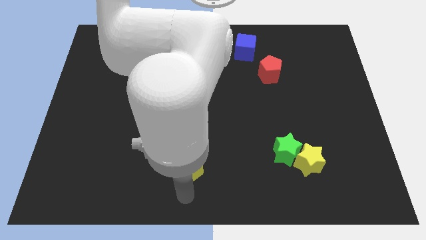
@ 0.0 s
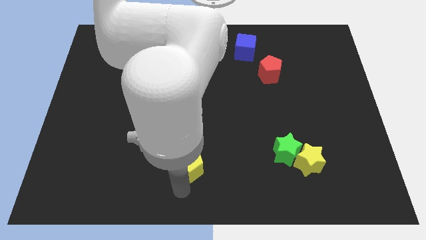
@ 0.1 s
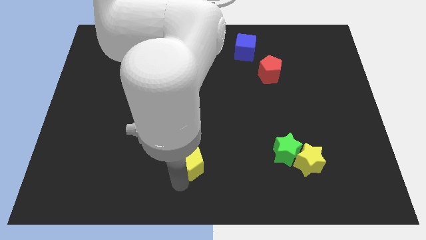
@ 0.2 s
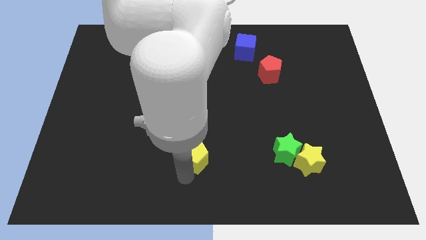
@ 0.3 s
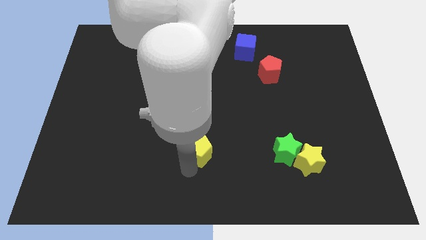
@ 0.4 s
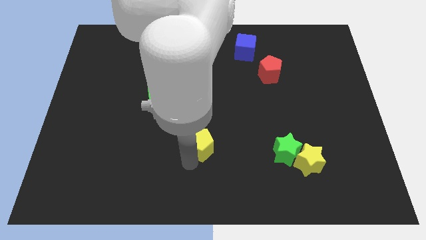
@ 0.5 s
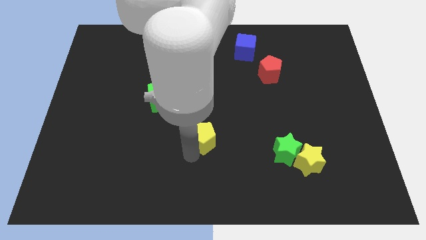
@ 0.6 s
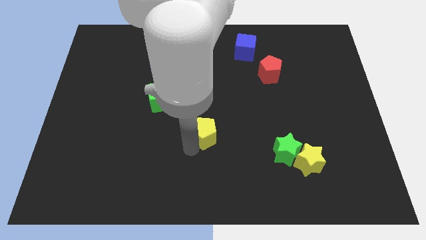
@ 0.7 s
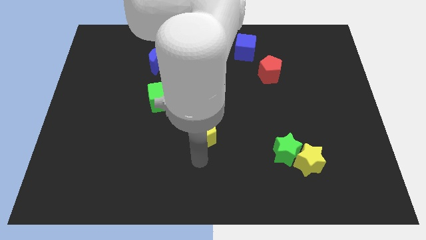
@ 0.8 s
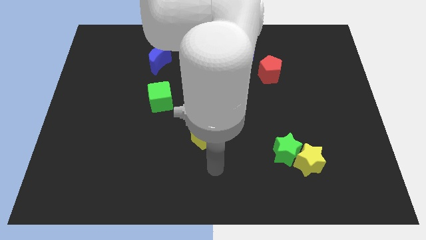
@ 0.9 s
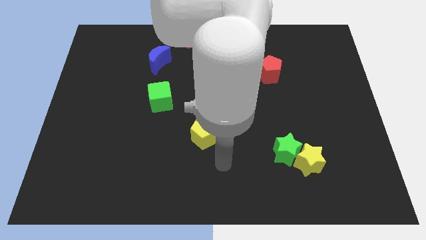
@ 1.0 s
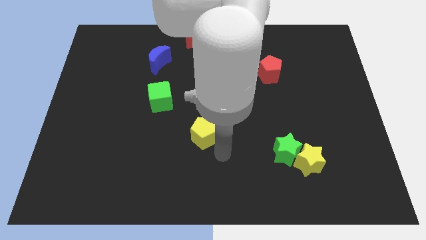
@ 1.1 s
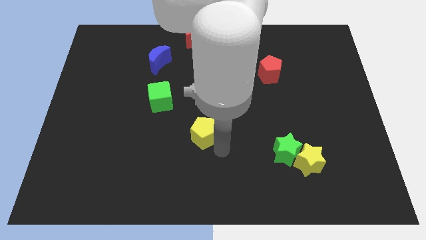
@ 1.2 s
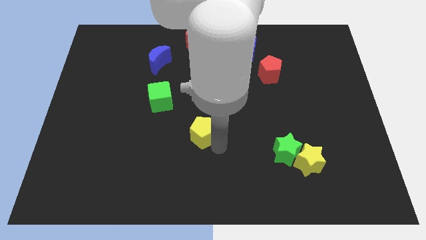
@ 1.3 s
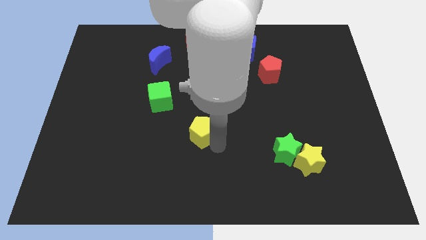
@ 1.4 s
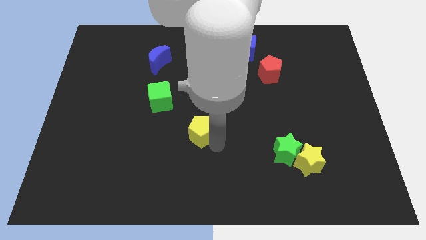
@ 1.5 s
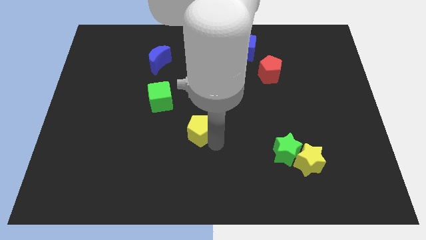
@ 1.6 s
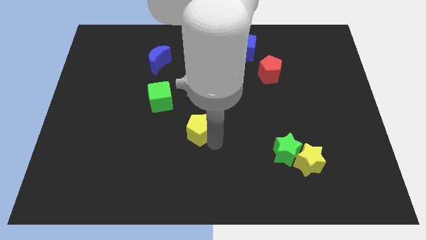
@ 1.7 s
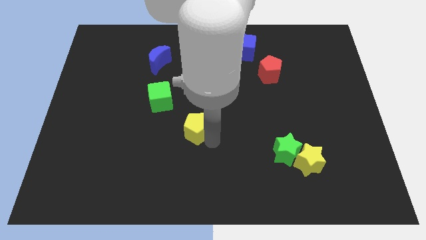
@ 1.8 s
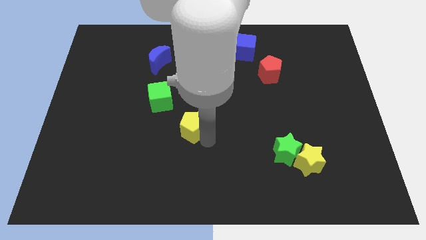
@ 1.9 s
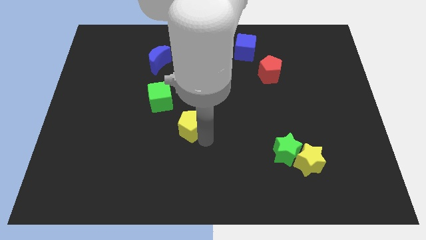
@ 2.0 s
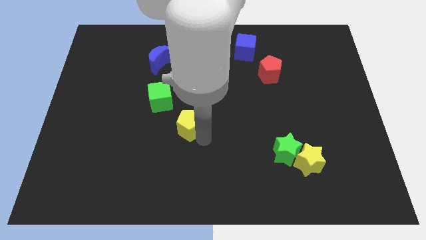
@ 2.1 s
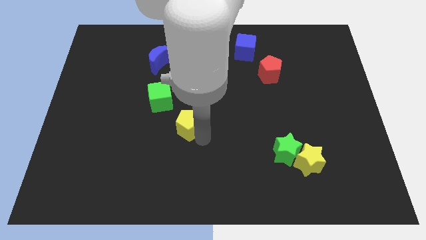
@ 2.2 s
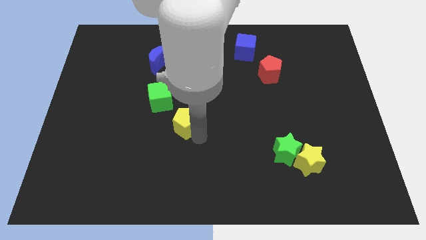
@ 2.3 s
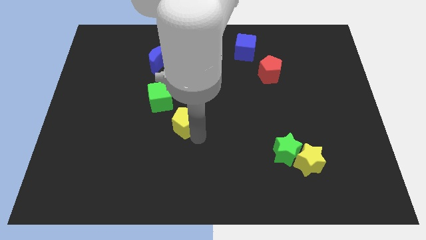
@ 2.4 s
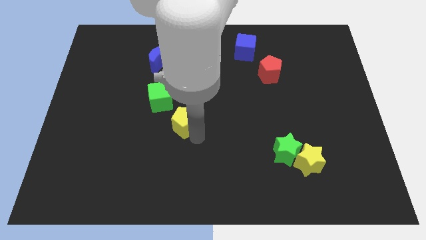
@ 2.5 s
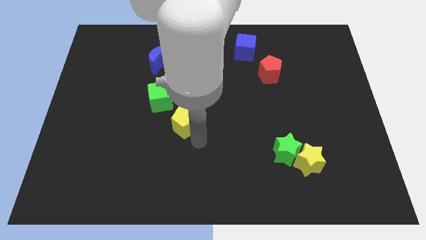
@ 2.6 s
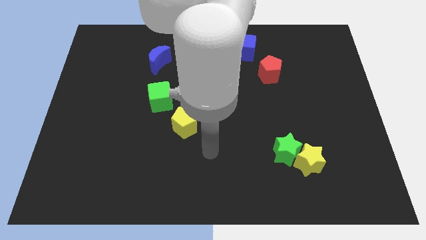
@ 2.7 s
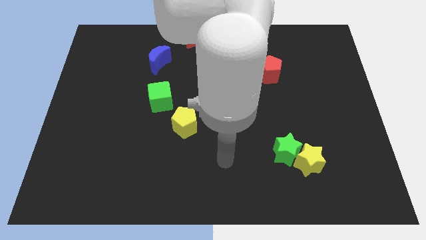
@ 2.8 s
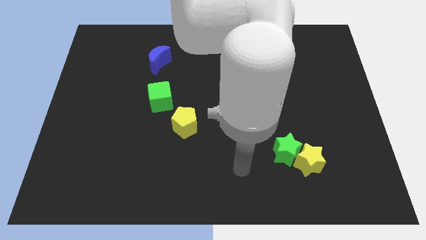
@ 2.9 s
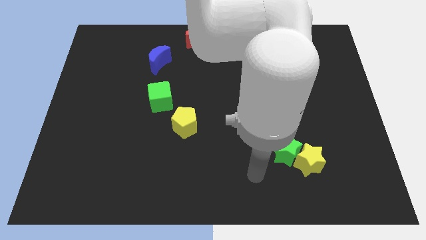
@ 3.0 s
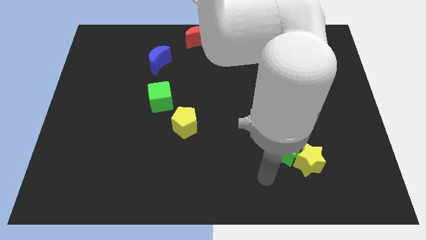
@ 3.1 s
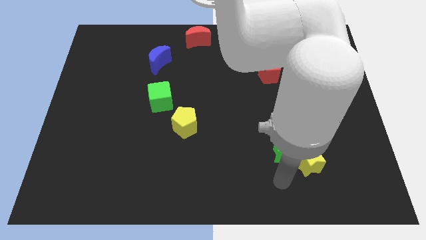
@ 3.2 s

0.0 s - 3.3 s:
put yellow pentagon vertically below red moon

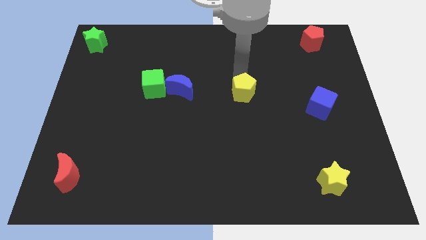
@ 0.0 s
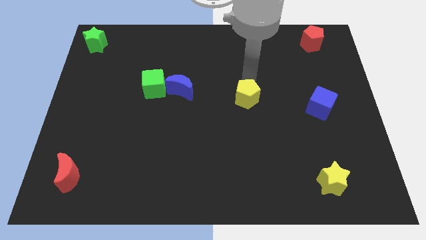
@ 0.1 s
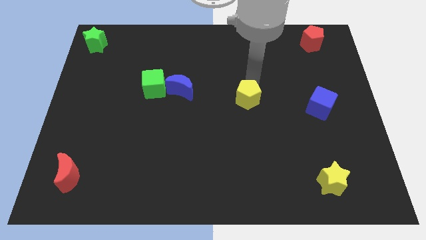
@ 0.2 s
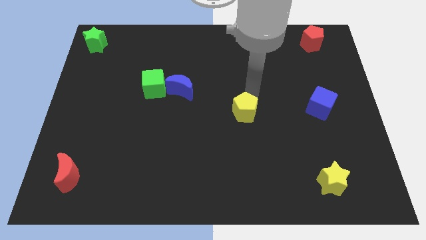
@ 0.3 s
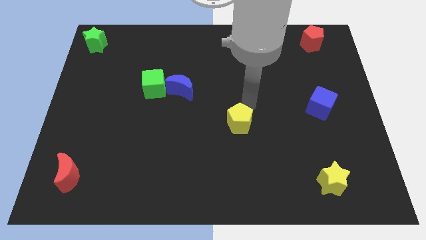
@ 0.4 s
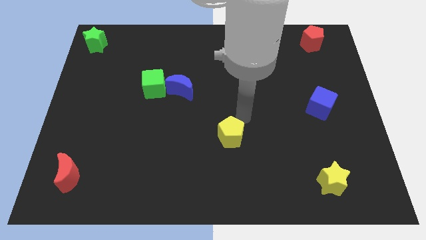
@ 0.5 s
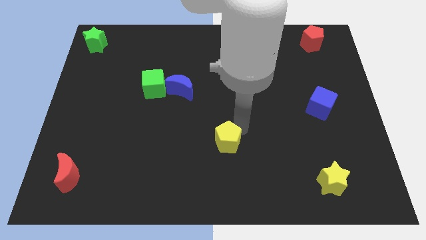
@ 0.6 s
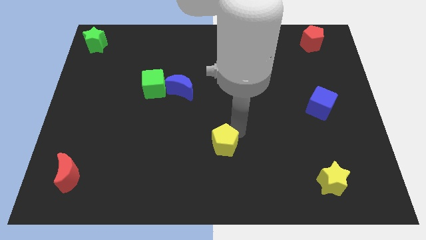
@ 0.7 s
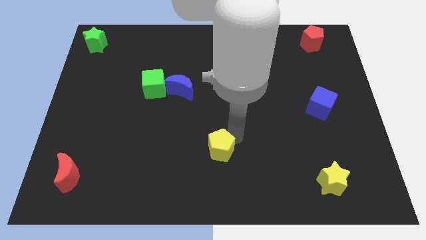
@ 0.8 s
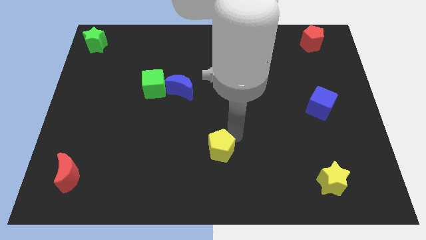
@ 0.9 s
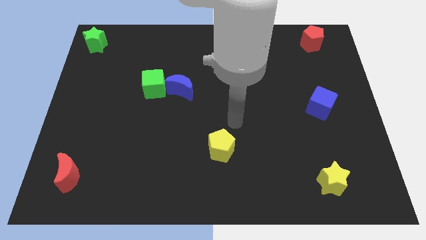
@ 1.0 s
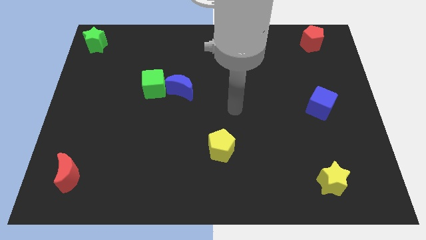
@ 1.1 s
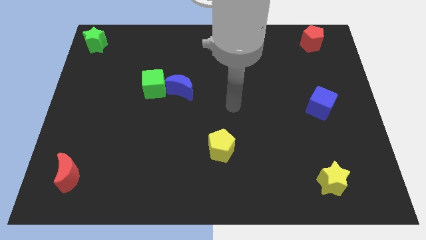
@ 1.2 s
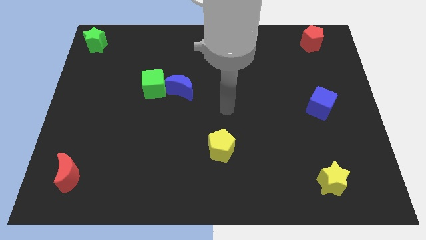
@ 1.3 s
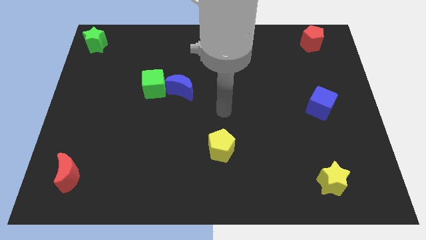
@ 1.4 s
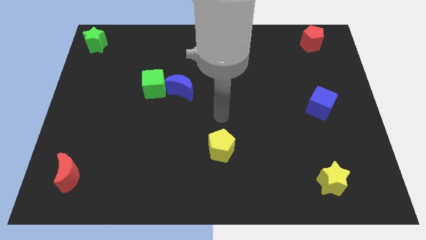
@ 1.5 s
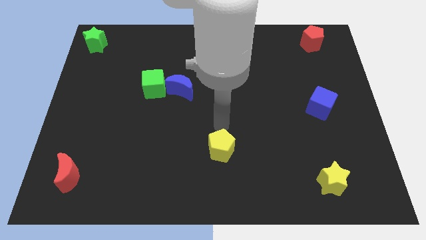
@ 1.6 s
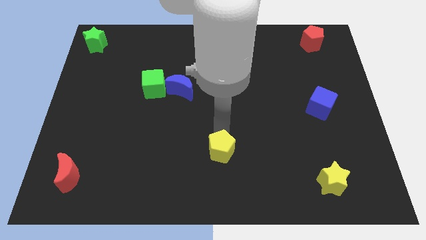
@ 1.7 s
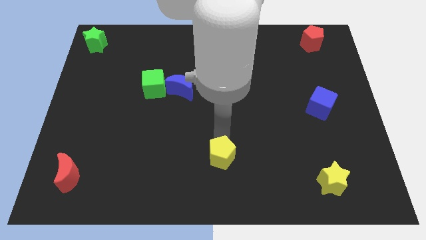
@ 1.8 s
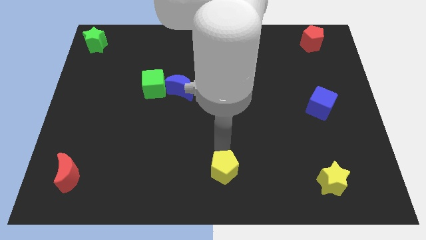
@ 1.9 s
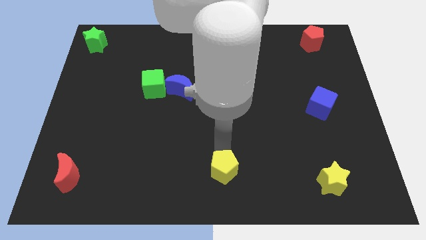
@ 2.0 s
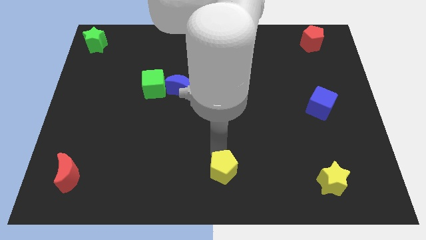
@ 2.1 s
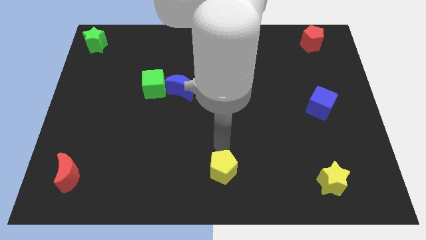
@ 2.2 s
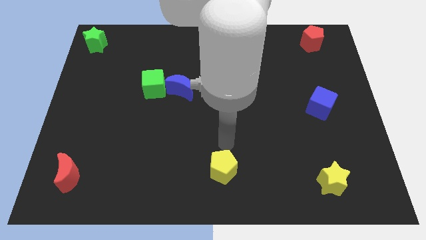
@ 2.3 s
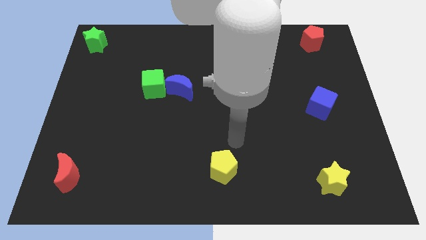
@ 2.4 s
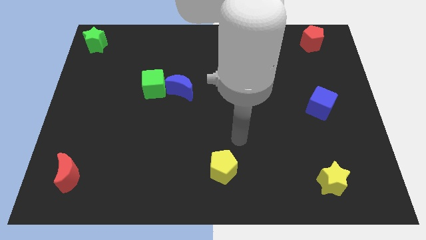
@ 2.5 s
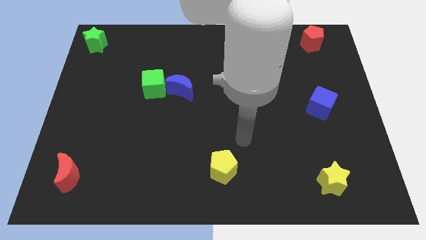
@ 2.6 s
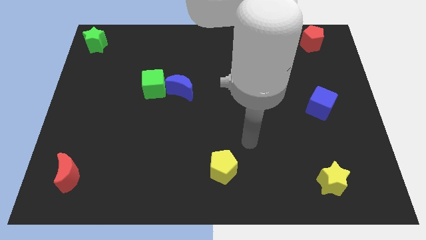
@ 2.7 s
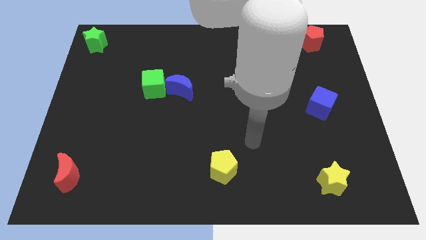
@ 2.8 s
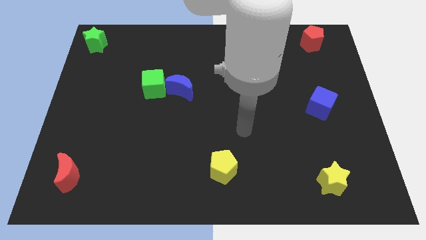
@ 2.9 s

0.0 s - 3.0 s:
push the yellow pentagon towards the bottom center of the board

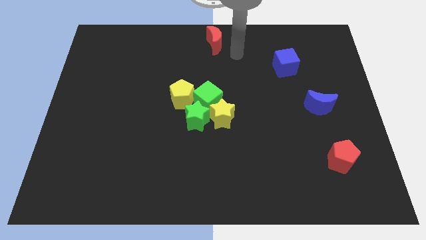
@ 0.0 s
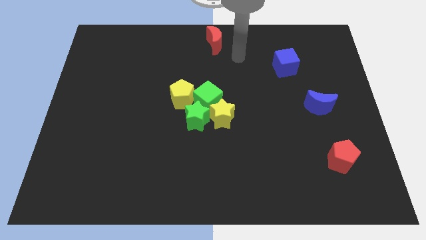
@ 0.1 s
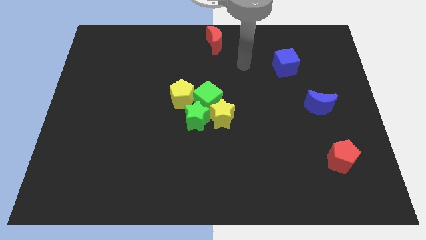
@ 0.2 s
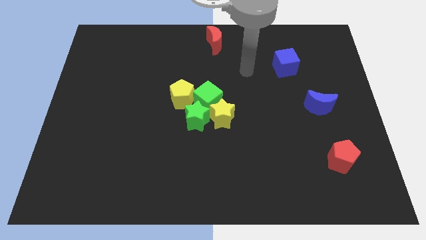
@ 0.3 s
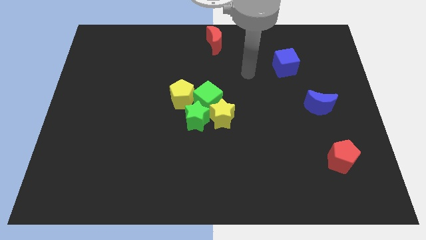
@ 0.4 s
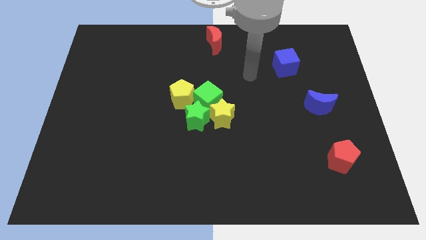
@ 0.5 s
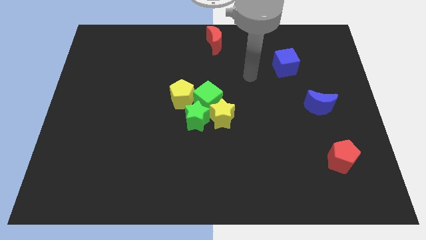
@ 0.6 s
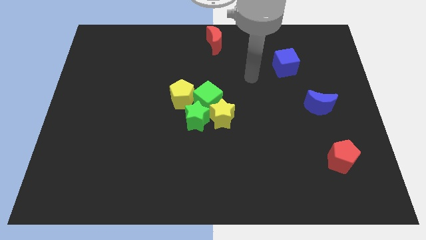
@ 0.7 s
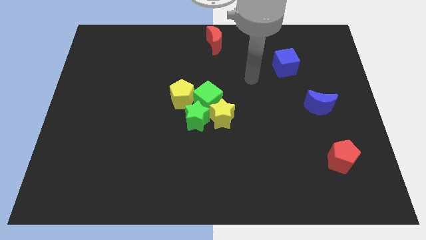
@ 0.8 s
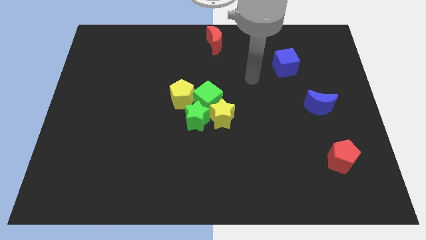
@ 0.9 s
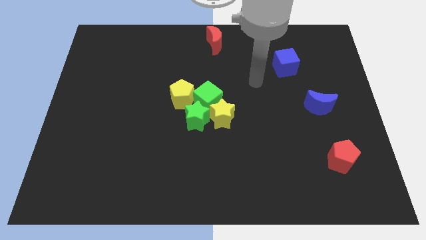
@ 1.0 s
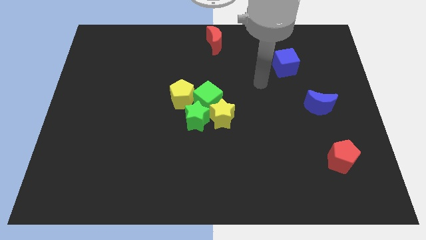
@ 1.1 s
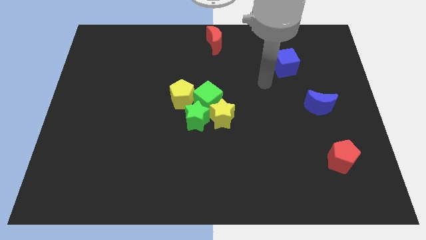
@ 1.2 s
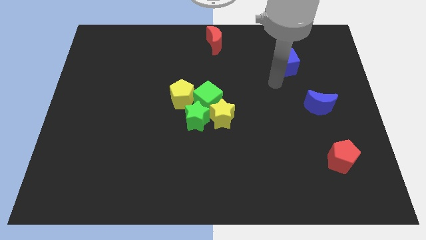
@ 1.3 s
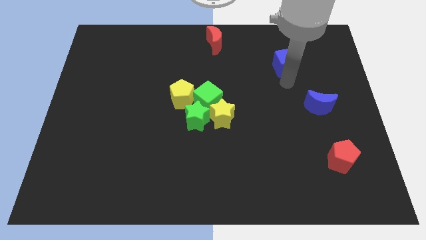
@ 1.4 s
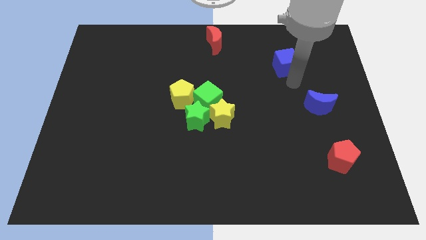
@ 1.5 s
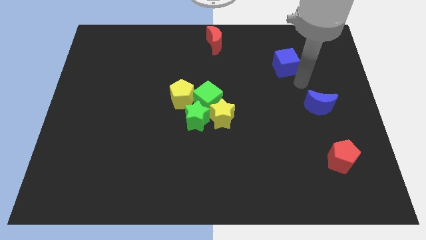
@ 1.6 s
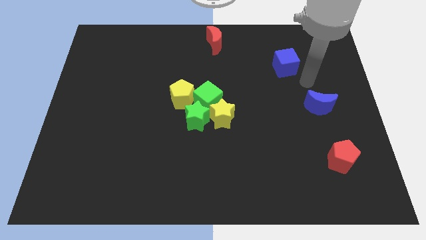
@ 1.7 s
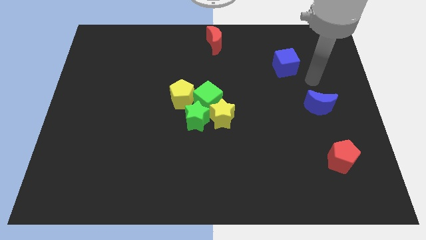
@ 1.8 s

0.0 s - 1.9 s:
move your arm to the top side of the blue moon

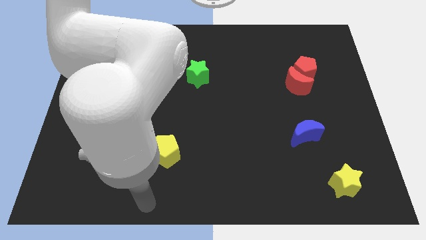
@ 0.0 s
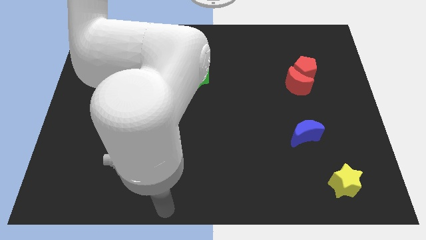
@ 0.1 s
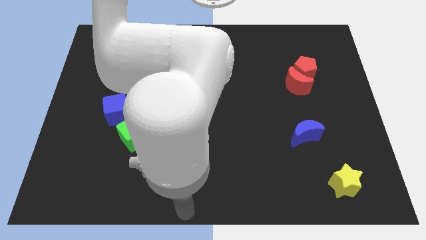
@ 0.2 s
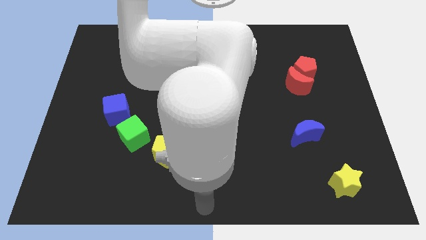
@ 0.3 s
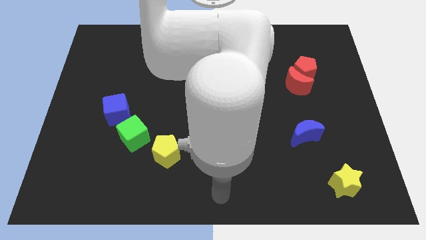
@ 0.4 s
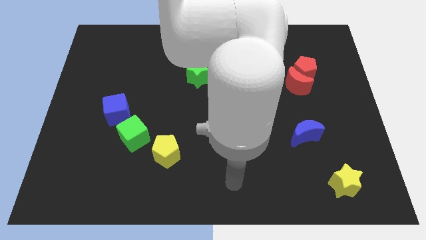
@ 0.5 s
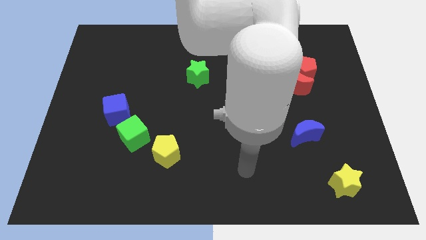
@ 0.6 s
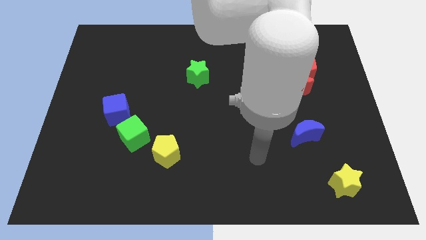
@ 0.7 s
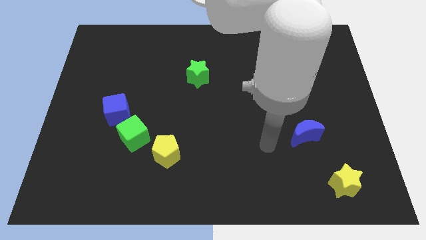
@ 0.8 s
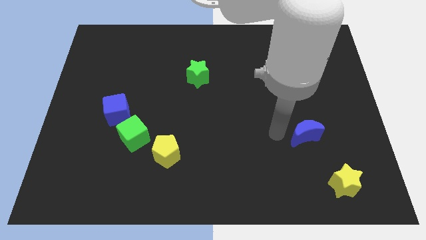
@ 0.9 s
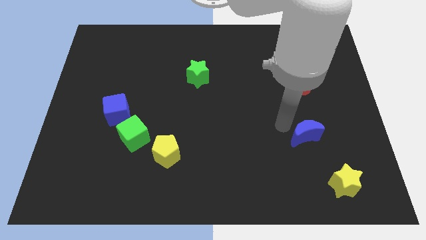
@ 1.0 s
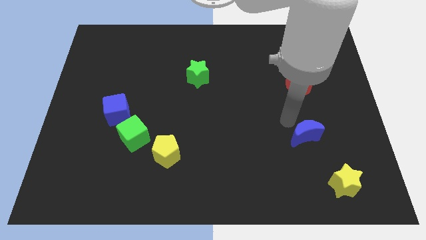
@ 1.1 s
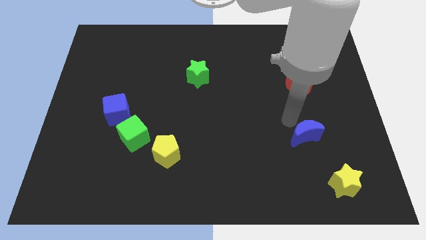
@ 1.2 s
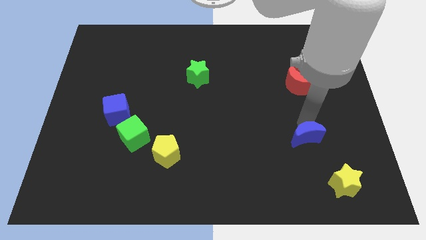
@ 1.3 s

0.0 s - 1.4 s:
place your arm to the top of blue moon
